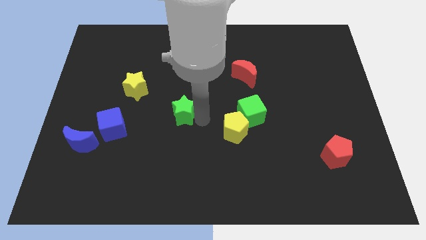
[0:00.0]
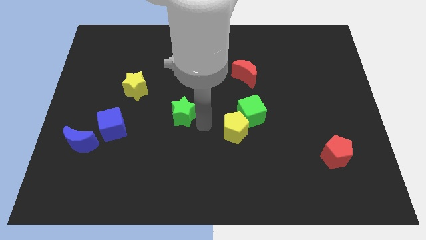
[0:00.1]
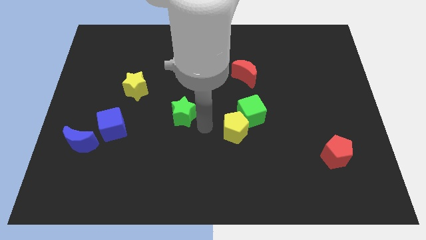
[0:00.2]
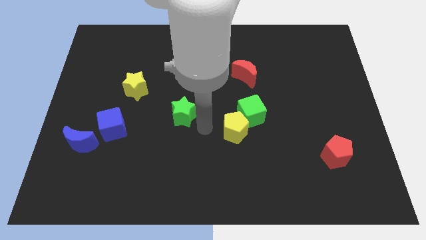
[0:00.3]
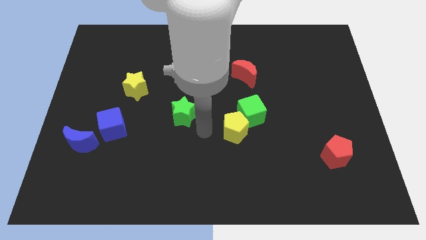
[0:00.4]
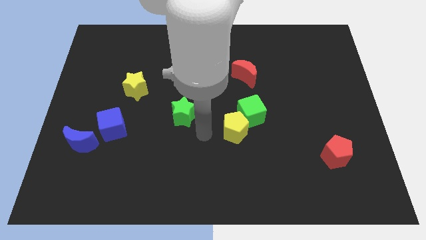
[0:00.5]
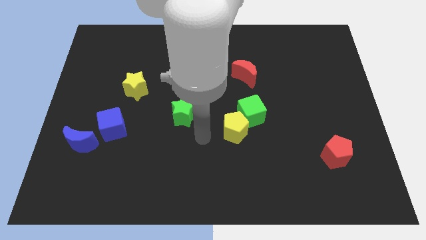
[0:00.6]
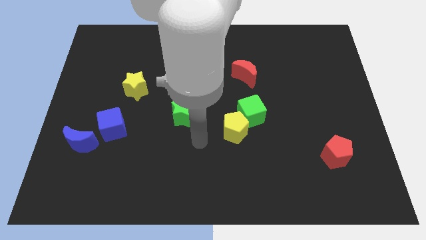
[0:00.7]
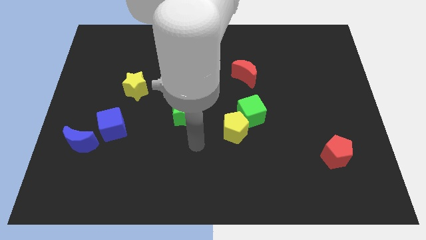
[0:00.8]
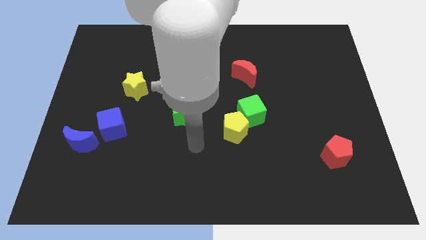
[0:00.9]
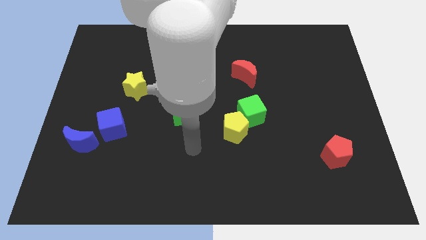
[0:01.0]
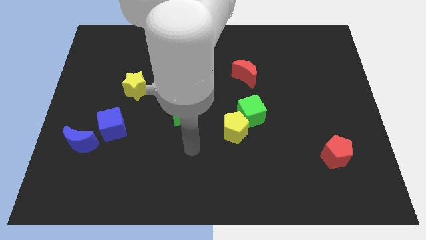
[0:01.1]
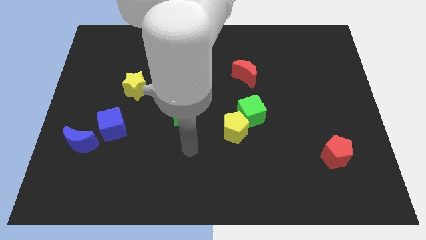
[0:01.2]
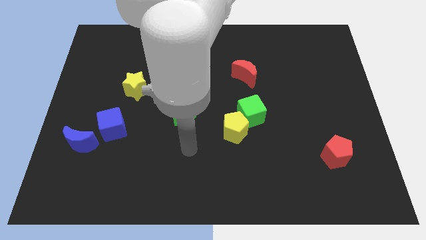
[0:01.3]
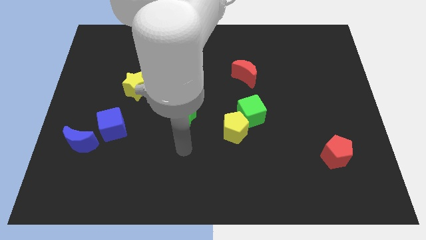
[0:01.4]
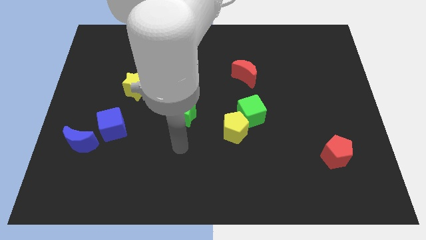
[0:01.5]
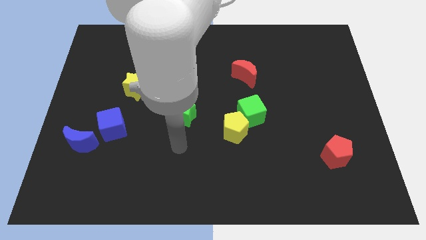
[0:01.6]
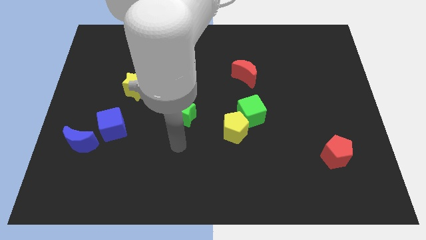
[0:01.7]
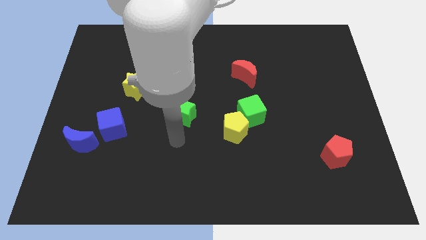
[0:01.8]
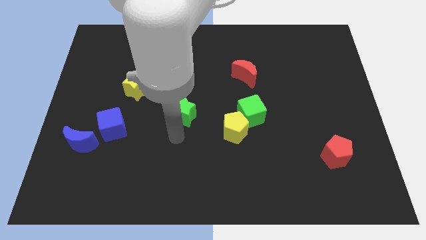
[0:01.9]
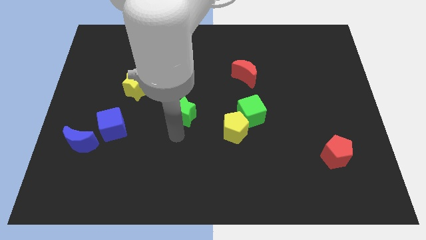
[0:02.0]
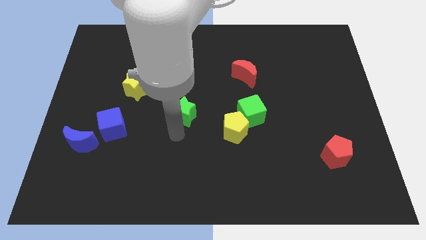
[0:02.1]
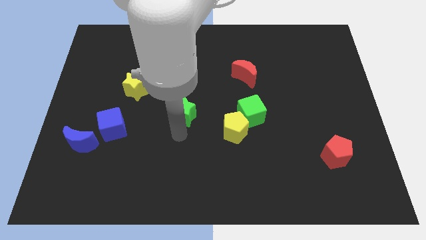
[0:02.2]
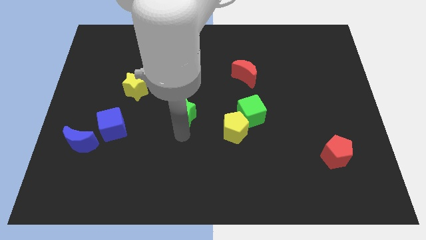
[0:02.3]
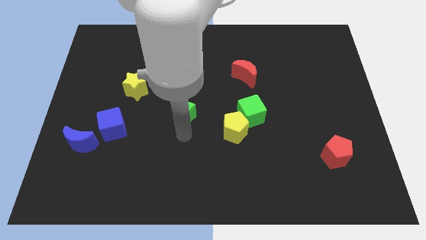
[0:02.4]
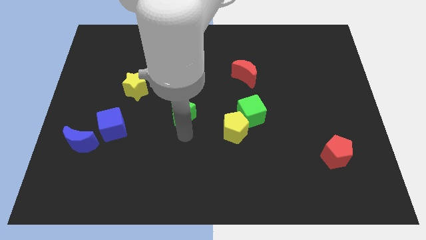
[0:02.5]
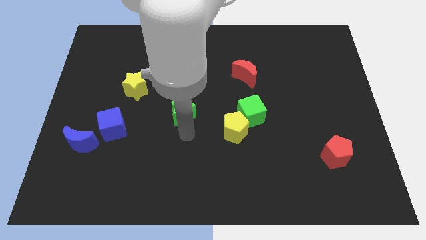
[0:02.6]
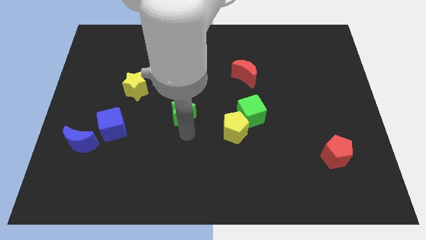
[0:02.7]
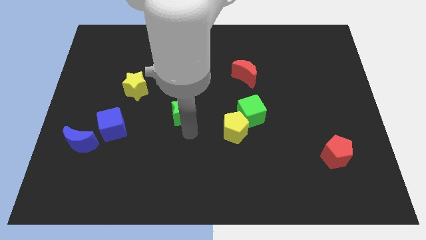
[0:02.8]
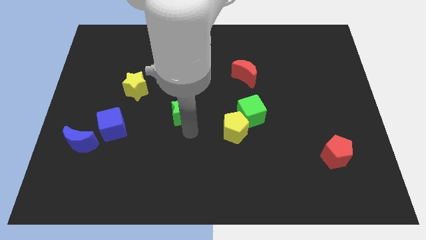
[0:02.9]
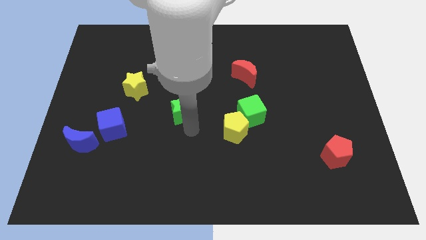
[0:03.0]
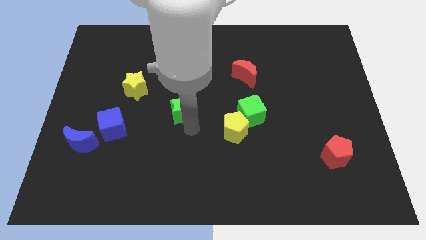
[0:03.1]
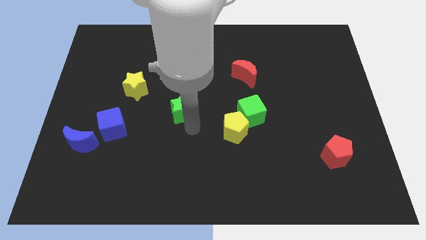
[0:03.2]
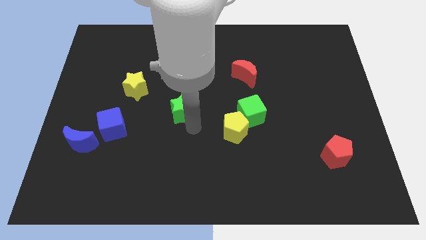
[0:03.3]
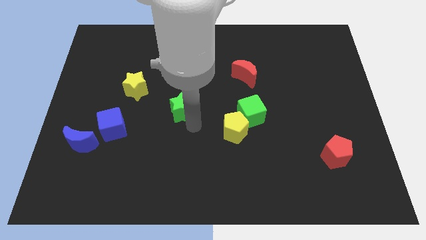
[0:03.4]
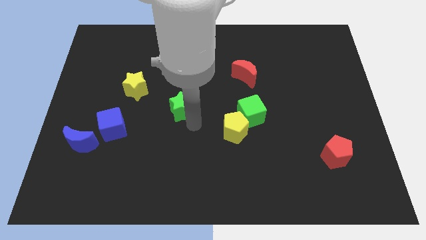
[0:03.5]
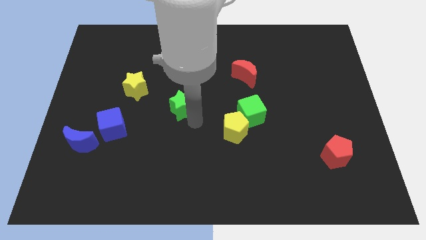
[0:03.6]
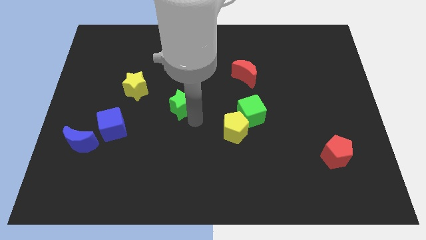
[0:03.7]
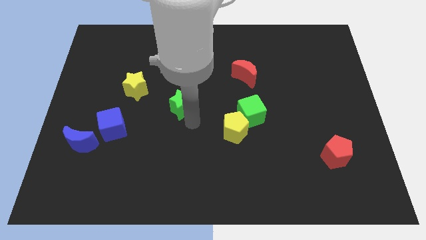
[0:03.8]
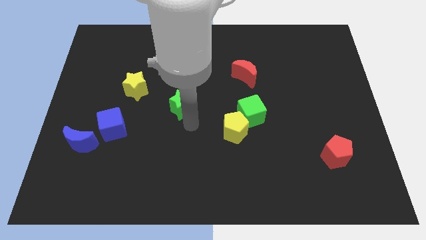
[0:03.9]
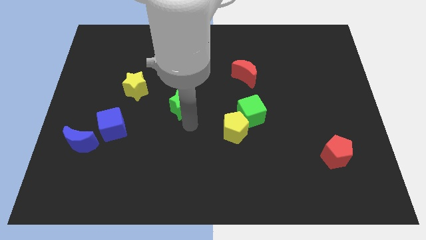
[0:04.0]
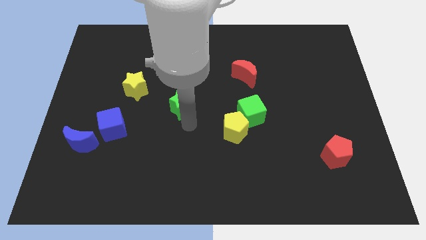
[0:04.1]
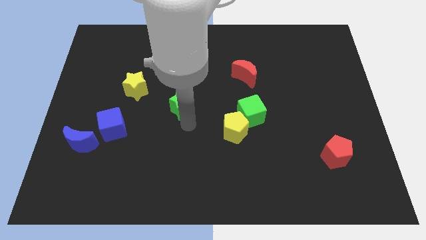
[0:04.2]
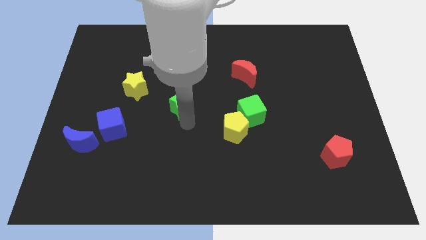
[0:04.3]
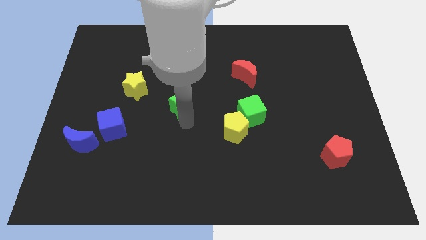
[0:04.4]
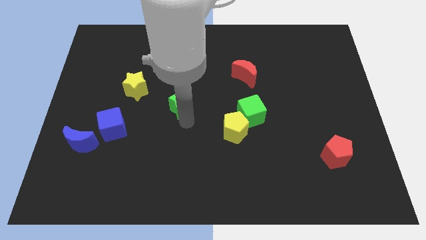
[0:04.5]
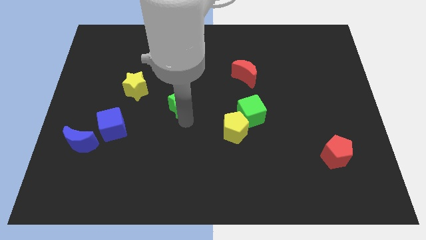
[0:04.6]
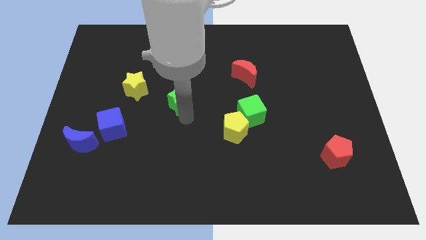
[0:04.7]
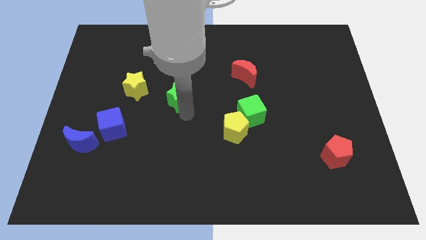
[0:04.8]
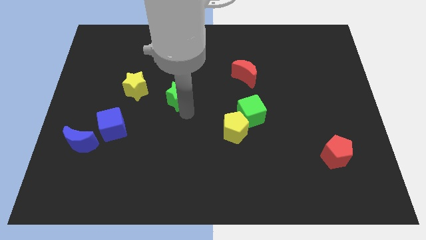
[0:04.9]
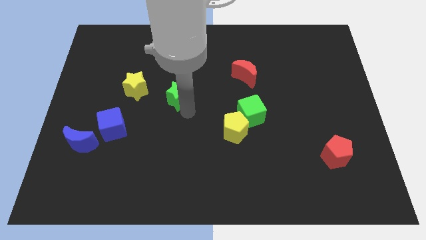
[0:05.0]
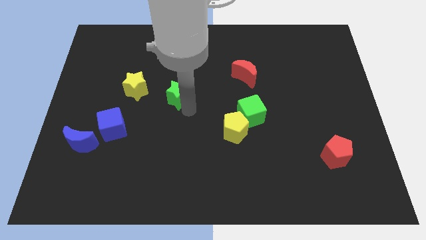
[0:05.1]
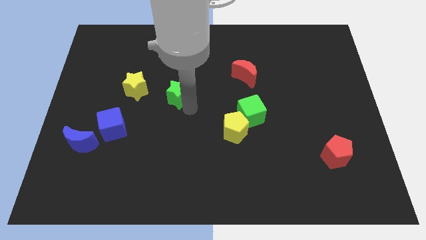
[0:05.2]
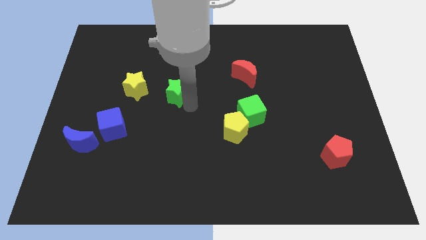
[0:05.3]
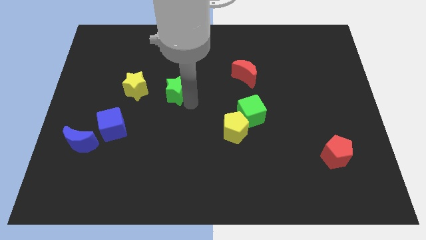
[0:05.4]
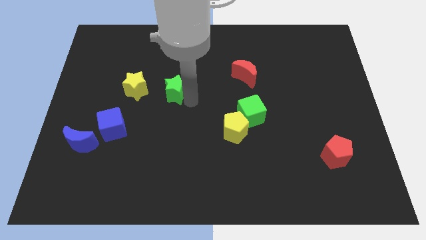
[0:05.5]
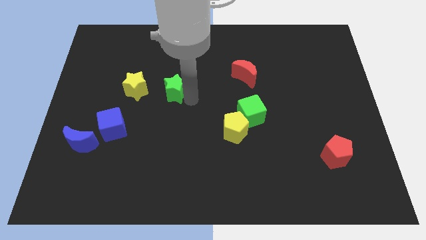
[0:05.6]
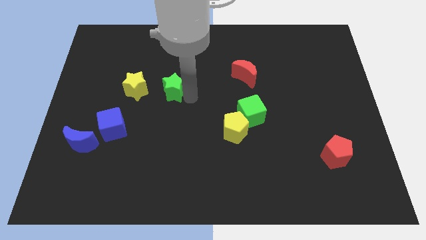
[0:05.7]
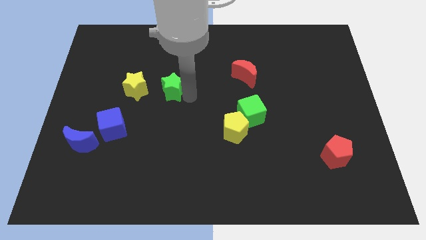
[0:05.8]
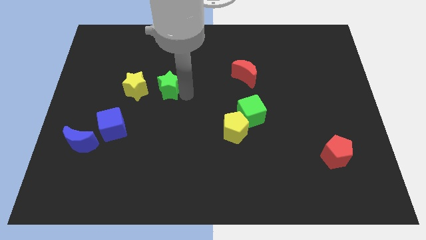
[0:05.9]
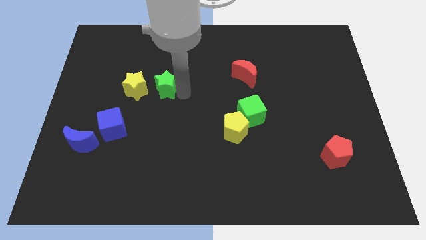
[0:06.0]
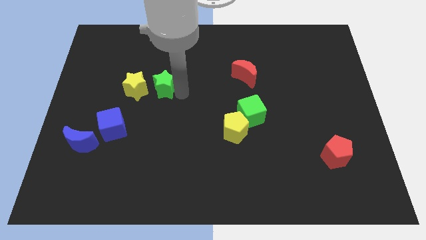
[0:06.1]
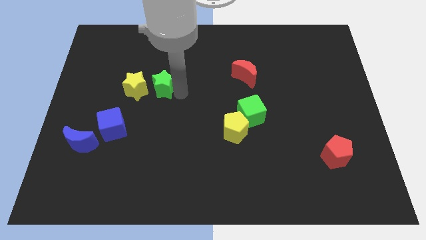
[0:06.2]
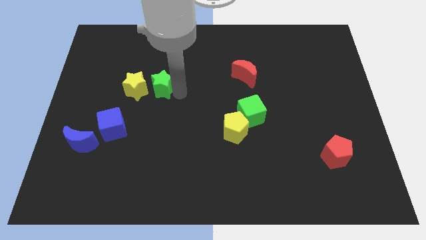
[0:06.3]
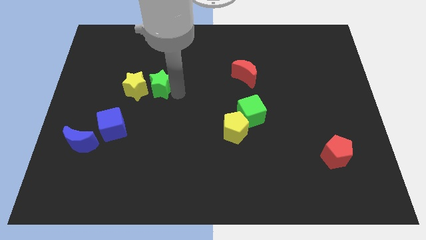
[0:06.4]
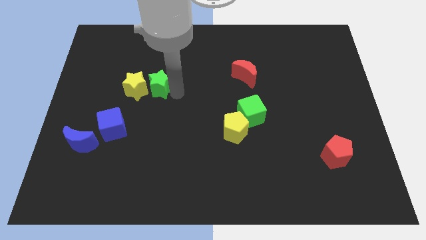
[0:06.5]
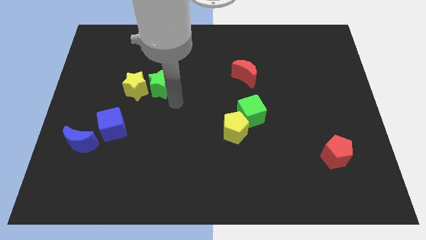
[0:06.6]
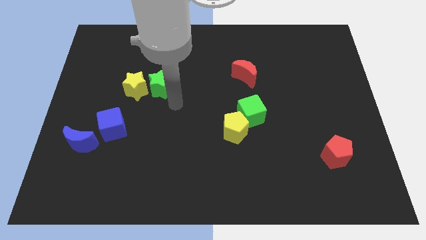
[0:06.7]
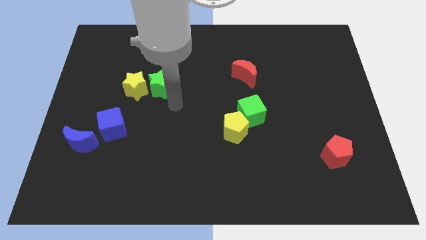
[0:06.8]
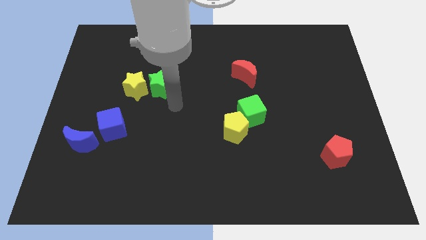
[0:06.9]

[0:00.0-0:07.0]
push the green star to the right side of the yellow star

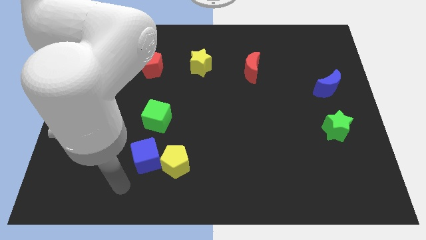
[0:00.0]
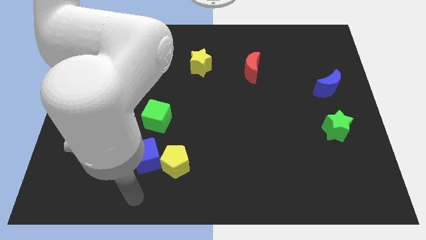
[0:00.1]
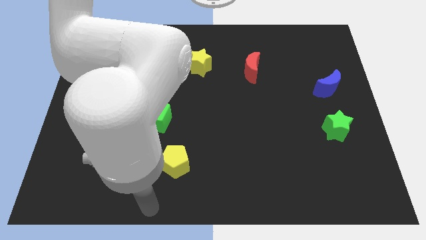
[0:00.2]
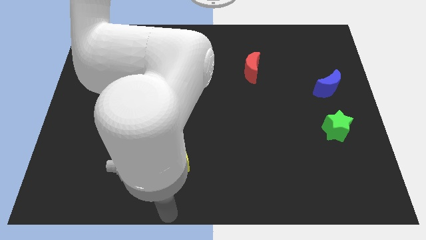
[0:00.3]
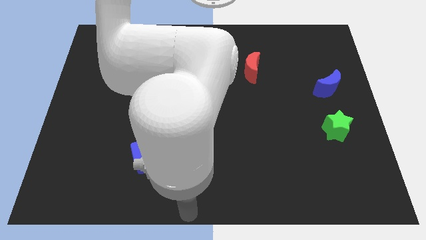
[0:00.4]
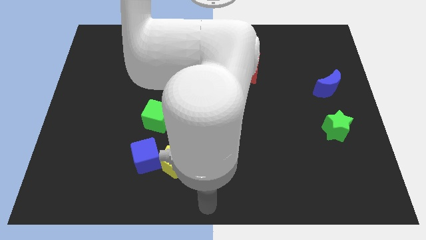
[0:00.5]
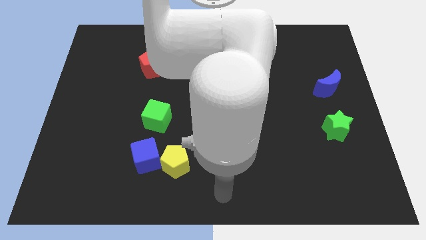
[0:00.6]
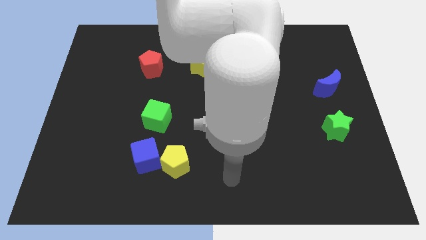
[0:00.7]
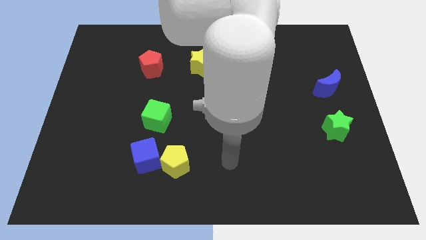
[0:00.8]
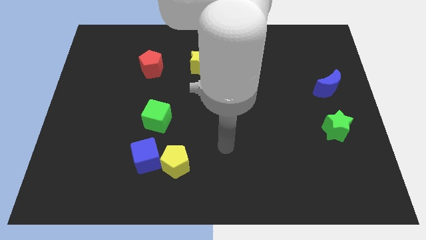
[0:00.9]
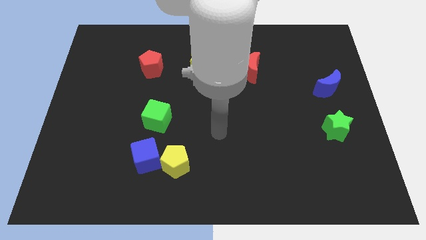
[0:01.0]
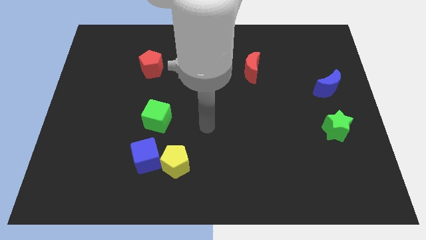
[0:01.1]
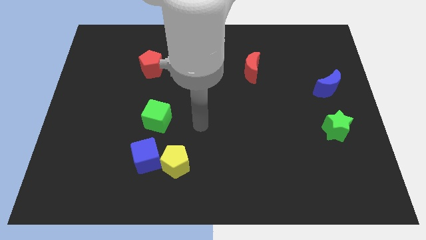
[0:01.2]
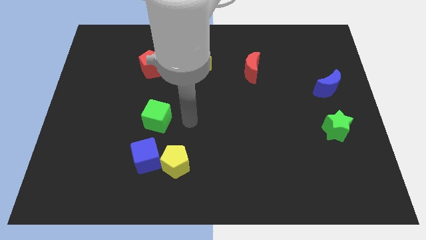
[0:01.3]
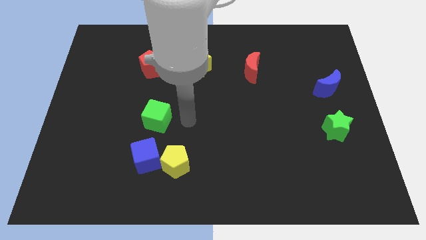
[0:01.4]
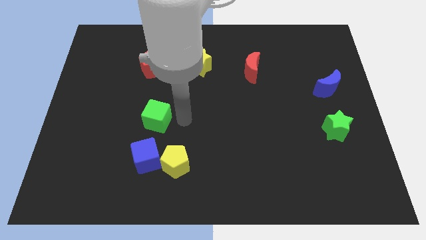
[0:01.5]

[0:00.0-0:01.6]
point your hand at the right side of the green cube

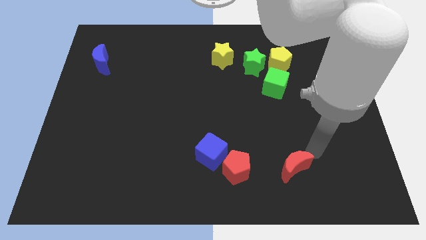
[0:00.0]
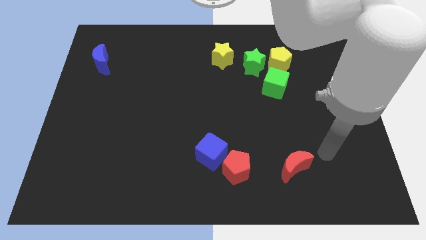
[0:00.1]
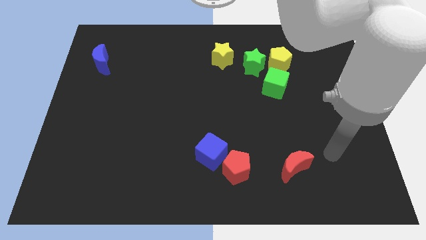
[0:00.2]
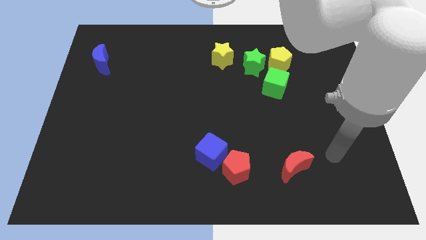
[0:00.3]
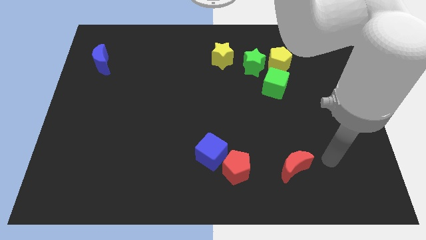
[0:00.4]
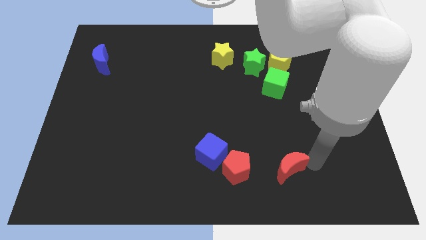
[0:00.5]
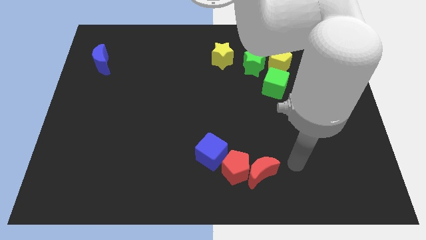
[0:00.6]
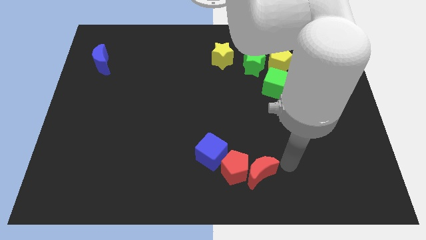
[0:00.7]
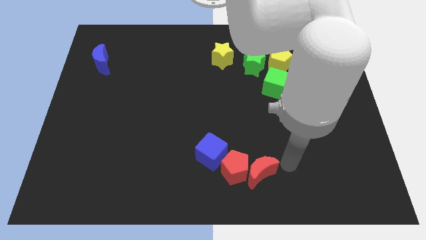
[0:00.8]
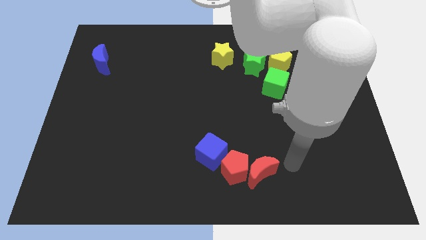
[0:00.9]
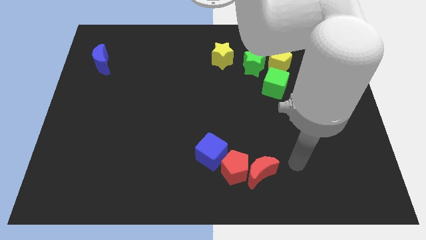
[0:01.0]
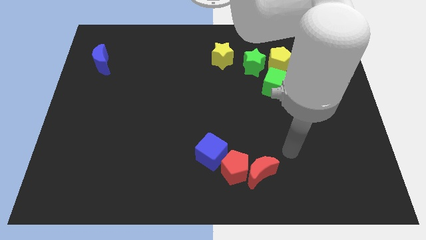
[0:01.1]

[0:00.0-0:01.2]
push the red crescent into the red pentagon
